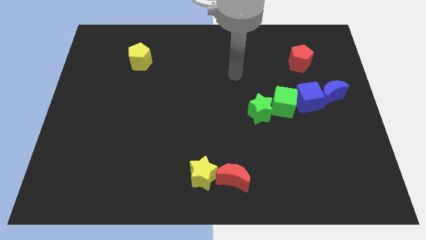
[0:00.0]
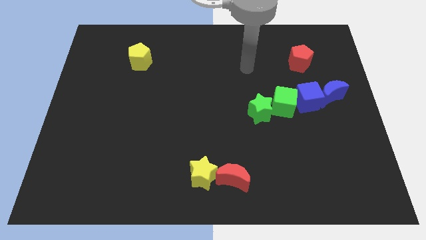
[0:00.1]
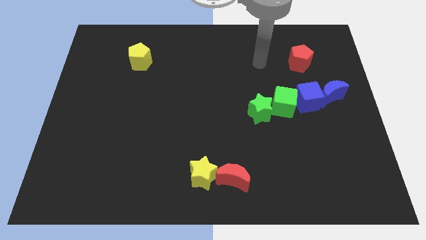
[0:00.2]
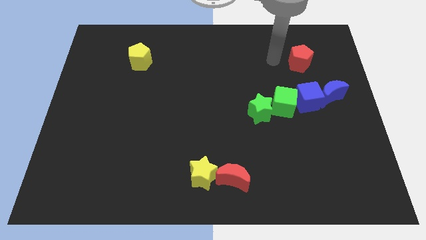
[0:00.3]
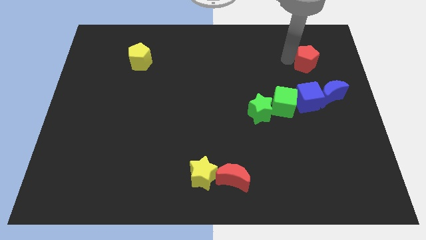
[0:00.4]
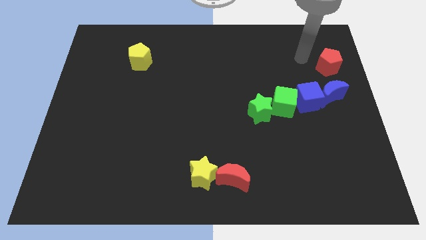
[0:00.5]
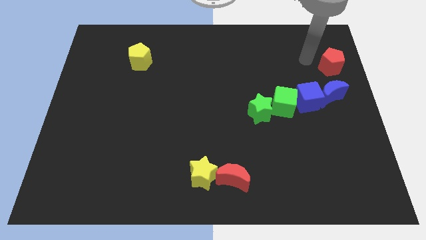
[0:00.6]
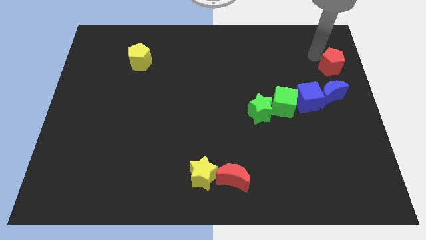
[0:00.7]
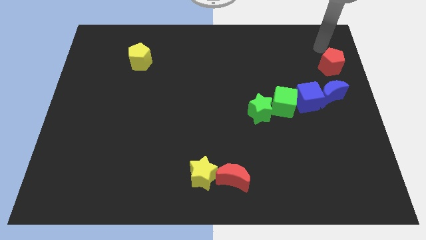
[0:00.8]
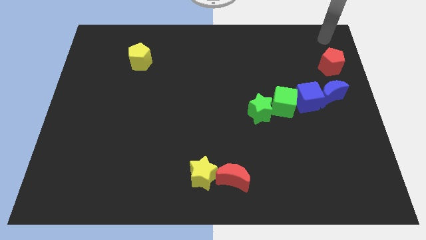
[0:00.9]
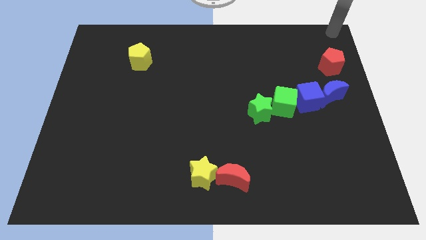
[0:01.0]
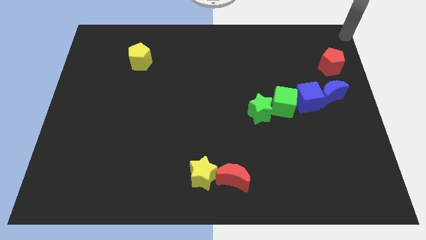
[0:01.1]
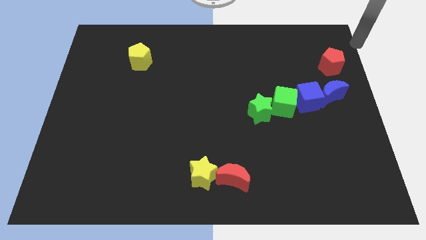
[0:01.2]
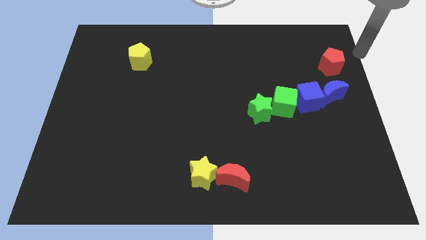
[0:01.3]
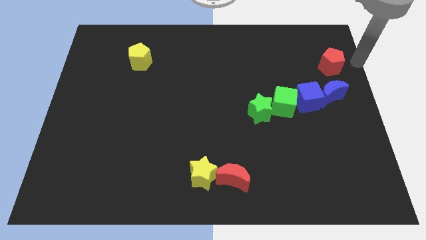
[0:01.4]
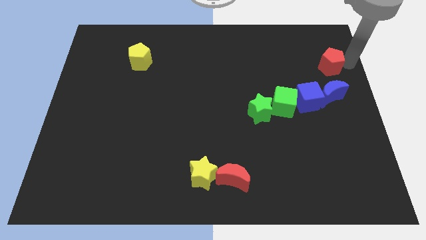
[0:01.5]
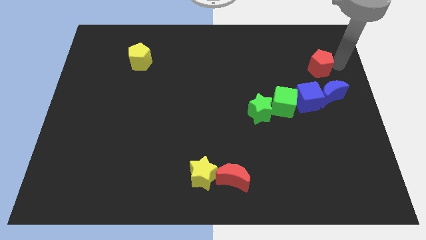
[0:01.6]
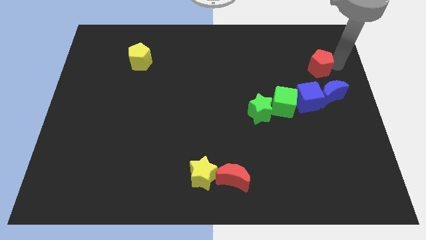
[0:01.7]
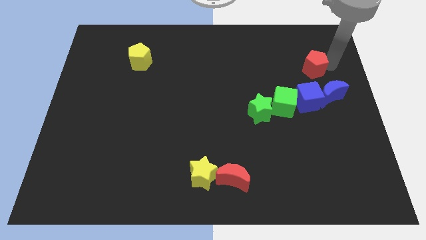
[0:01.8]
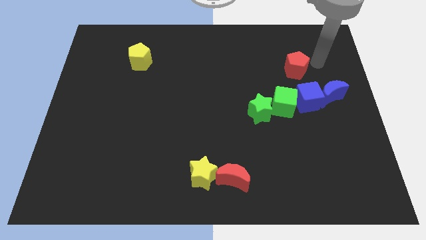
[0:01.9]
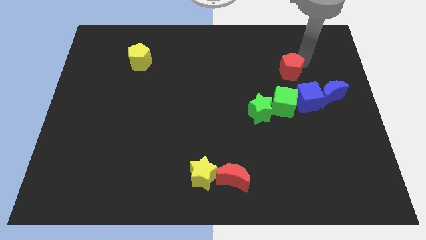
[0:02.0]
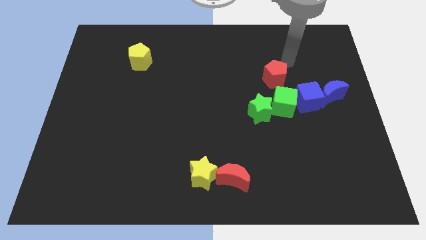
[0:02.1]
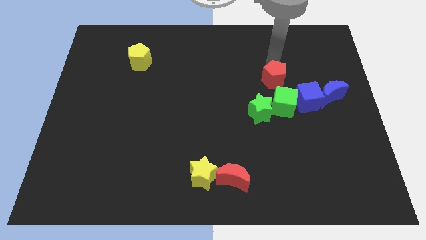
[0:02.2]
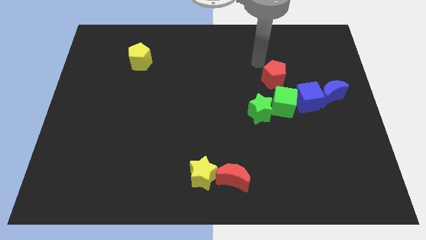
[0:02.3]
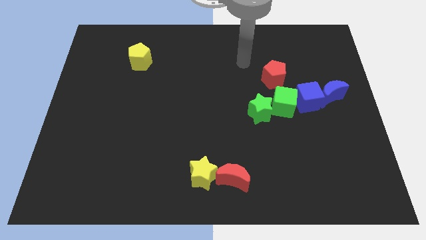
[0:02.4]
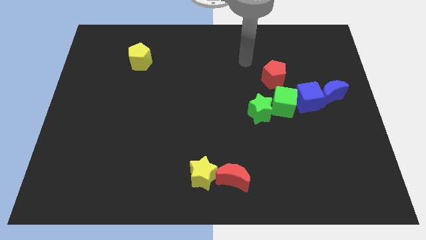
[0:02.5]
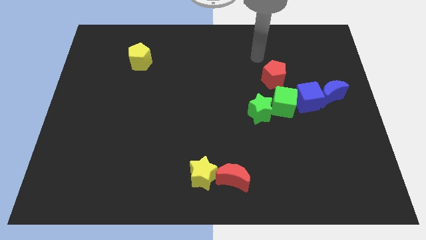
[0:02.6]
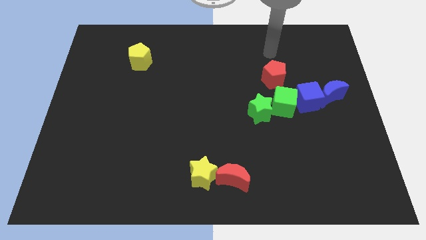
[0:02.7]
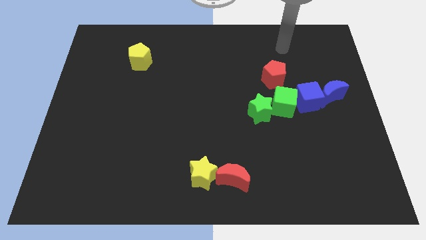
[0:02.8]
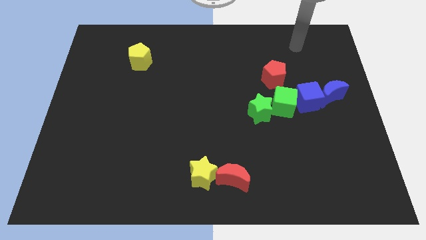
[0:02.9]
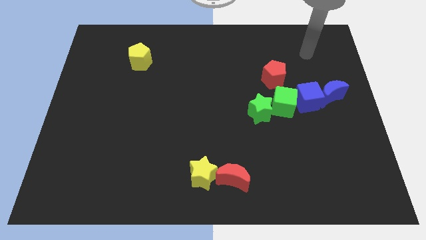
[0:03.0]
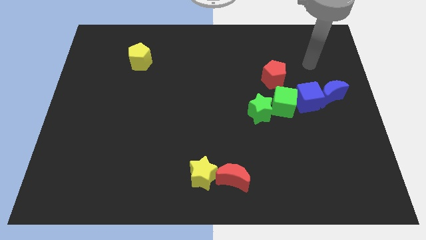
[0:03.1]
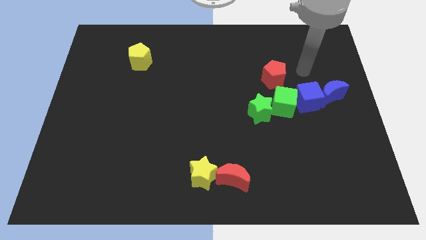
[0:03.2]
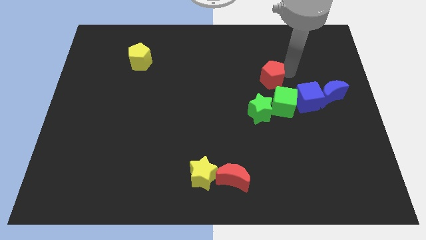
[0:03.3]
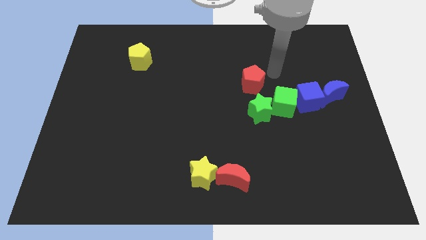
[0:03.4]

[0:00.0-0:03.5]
place the red pentagon above the green star

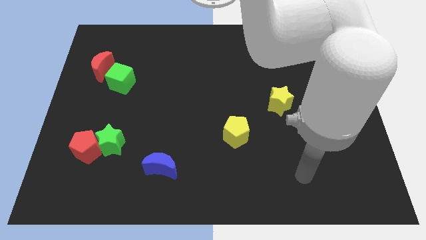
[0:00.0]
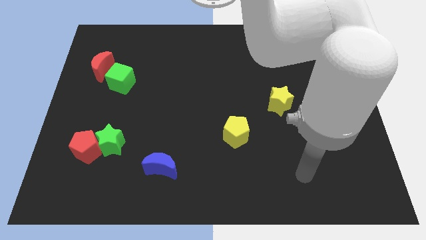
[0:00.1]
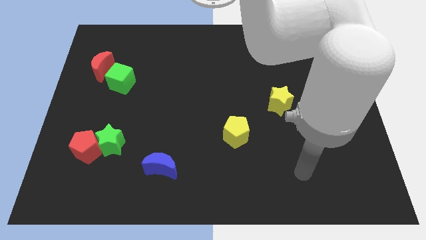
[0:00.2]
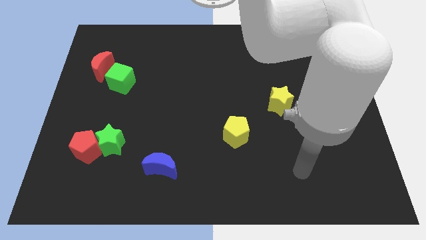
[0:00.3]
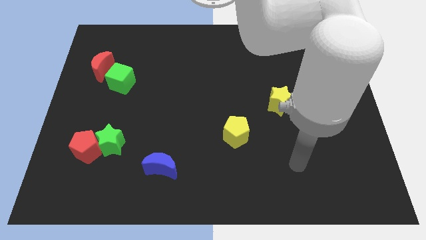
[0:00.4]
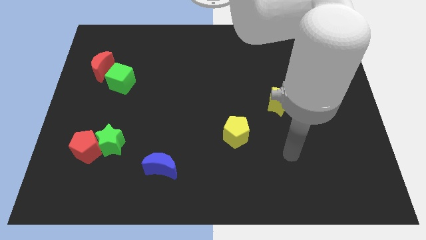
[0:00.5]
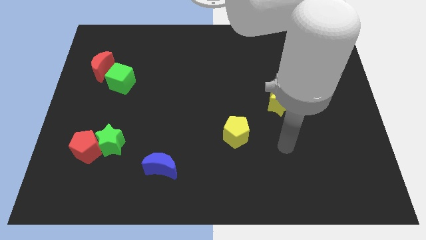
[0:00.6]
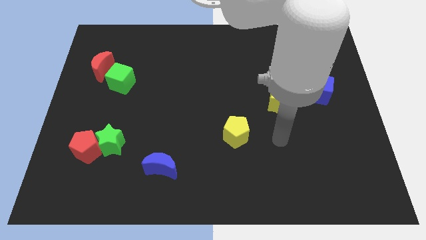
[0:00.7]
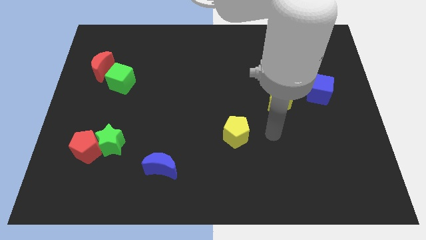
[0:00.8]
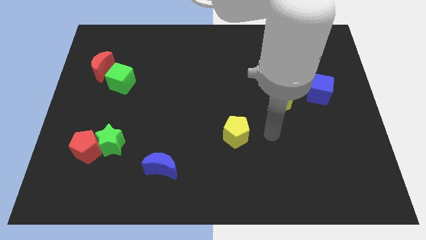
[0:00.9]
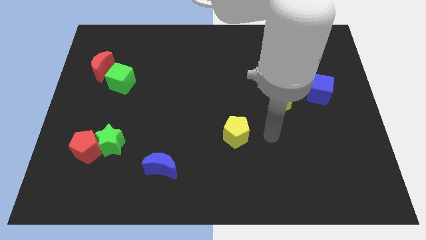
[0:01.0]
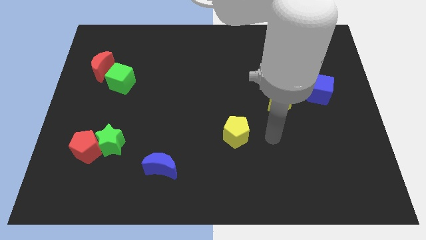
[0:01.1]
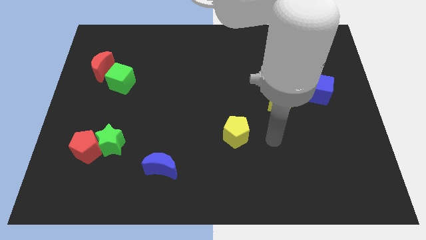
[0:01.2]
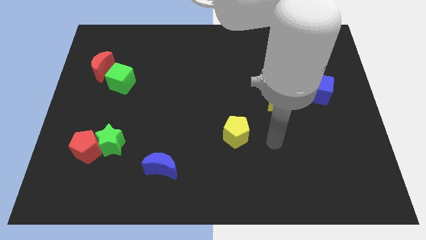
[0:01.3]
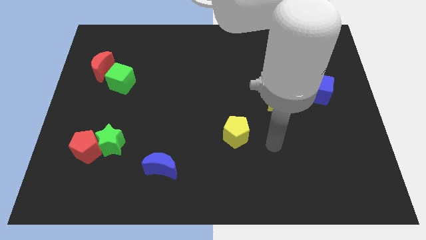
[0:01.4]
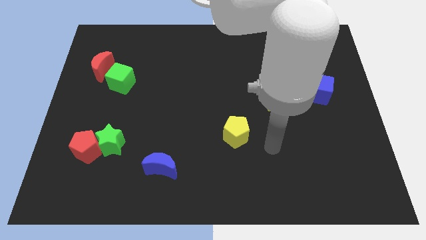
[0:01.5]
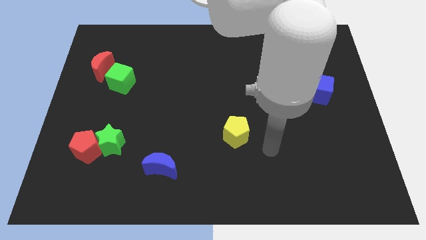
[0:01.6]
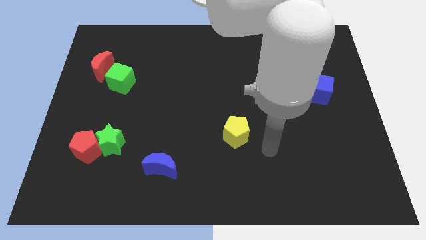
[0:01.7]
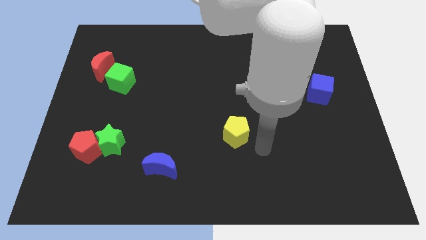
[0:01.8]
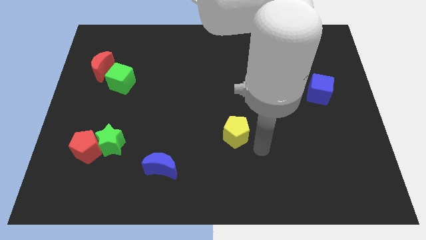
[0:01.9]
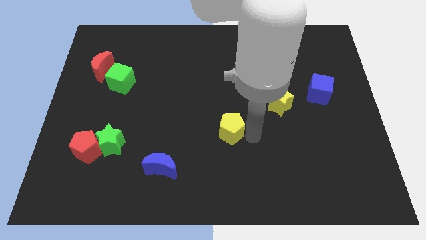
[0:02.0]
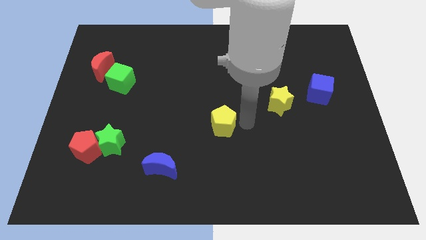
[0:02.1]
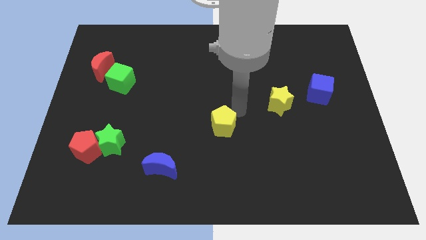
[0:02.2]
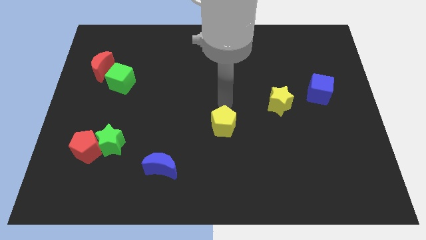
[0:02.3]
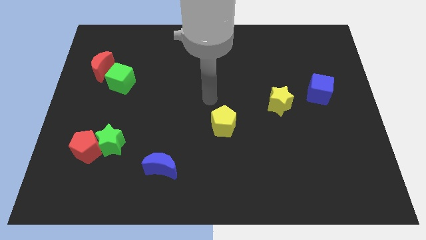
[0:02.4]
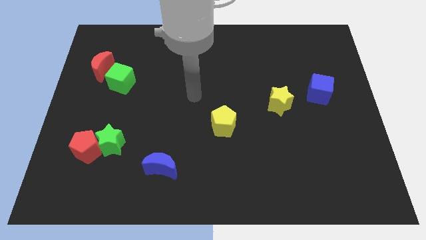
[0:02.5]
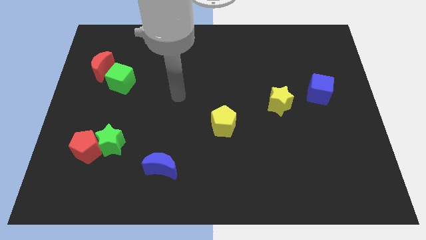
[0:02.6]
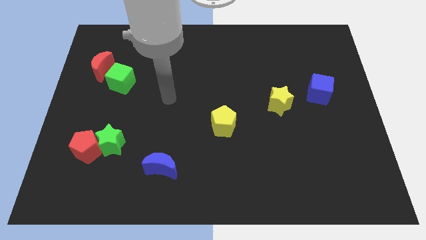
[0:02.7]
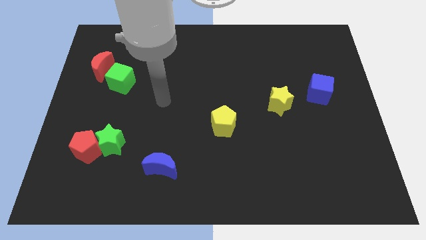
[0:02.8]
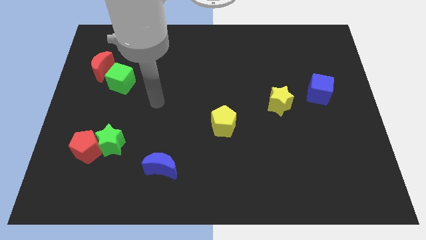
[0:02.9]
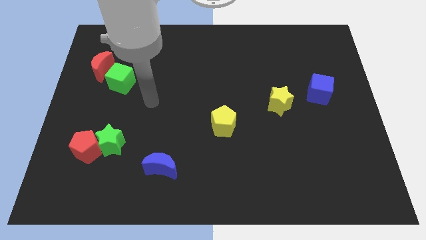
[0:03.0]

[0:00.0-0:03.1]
push the yellow pentagon slightly to the top side of the board

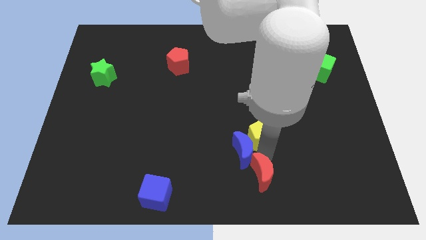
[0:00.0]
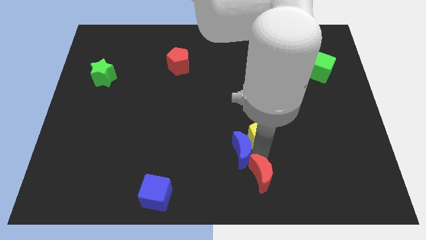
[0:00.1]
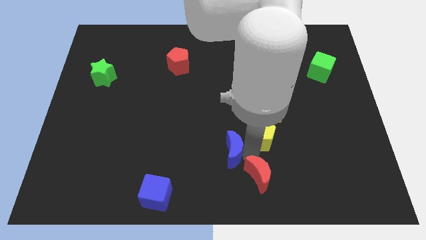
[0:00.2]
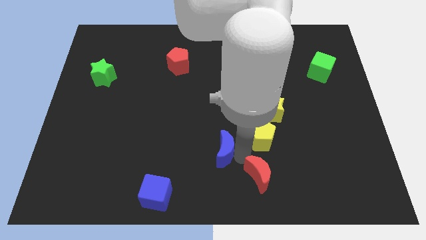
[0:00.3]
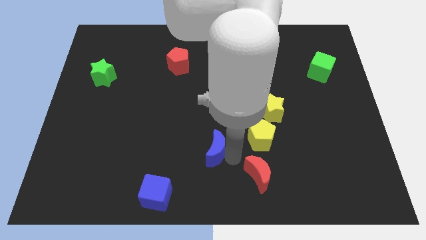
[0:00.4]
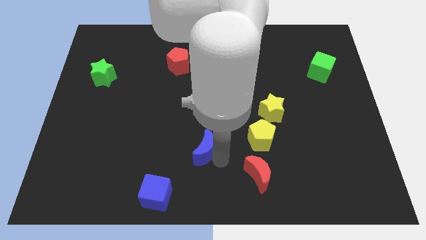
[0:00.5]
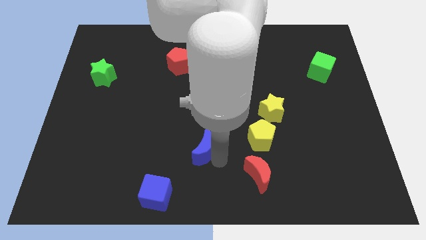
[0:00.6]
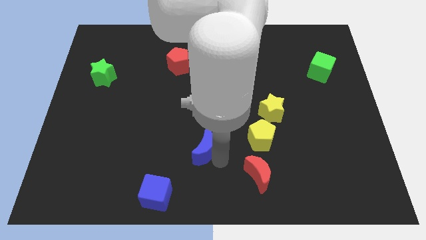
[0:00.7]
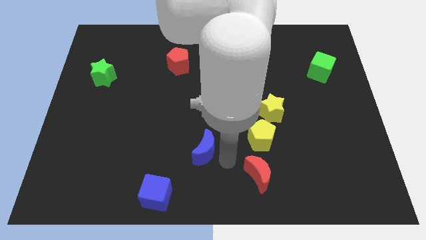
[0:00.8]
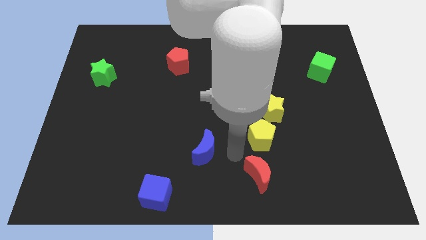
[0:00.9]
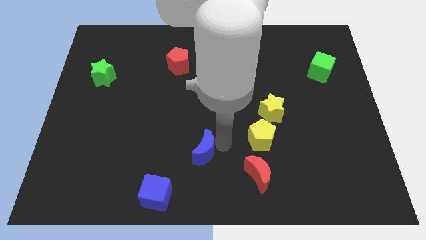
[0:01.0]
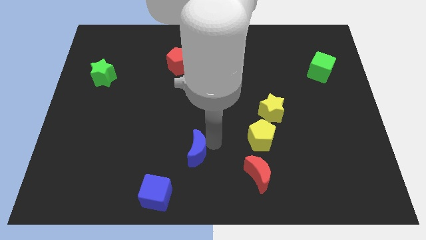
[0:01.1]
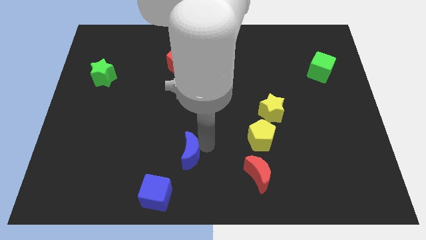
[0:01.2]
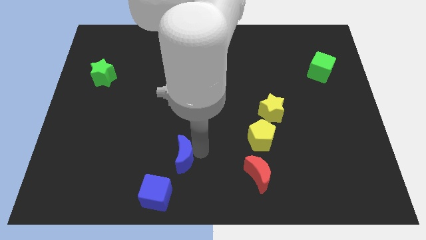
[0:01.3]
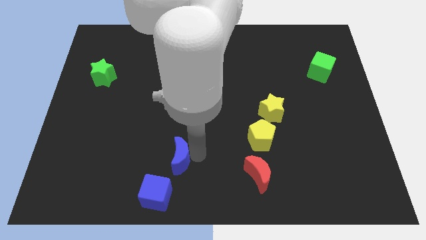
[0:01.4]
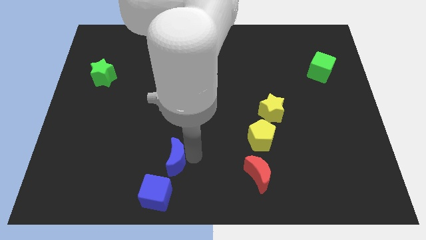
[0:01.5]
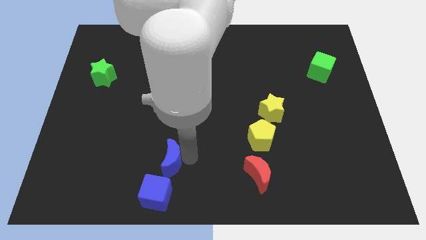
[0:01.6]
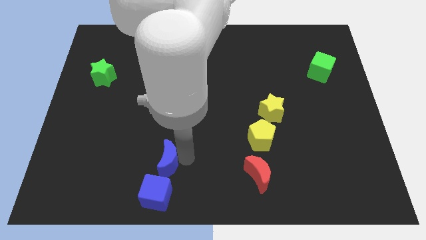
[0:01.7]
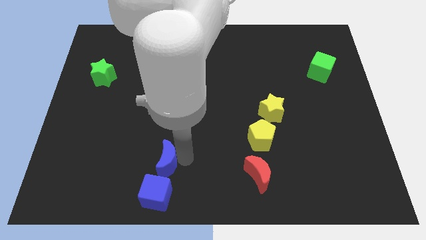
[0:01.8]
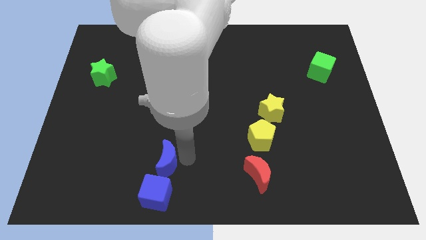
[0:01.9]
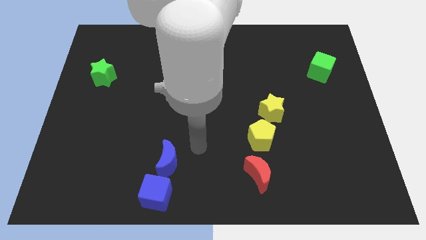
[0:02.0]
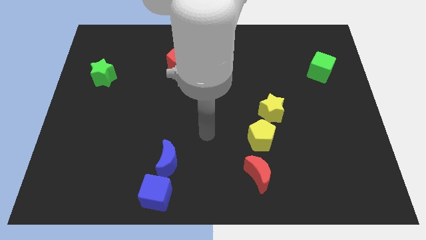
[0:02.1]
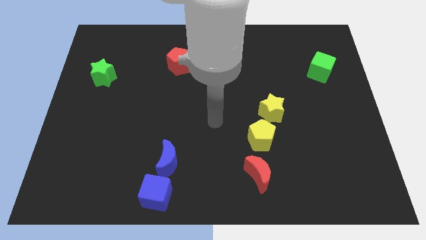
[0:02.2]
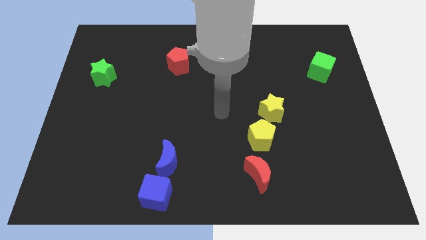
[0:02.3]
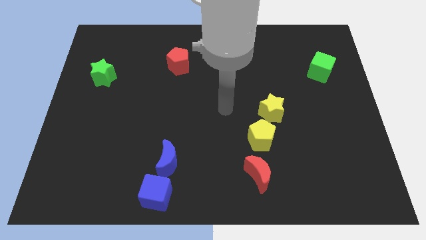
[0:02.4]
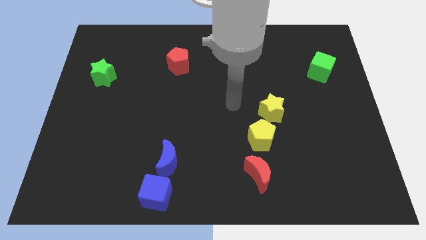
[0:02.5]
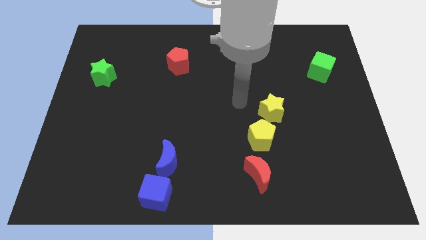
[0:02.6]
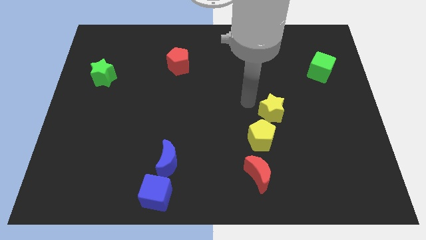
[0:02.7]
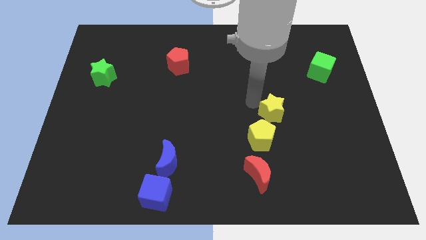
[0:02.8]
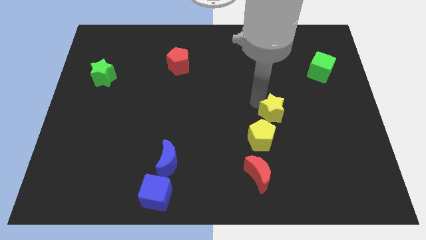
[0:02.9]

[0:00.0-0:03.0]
place the blue crescent to the top of blue cube
